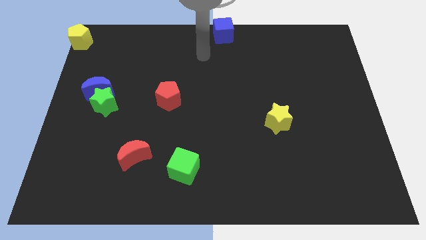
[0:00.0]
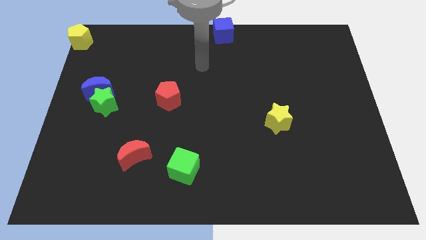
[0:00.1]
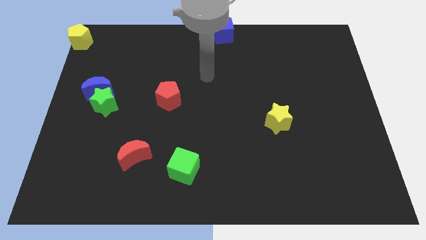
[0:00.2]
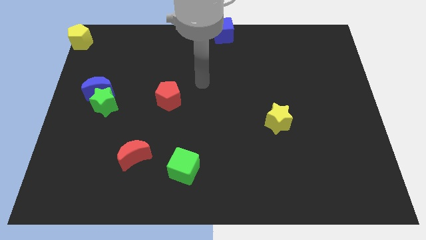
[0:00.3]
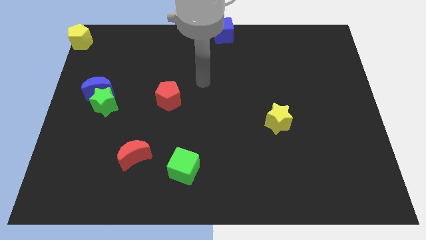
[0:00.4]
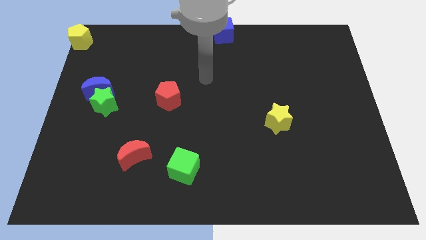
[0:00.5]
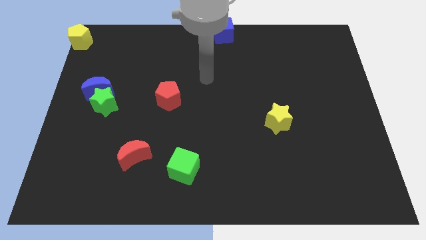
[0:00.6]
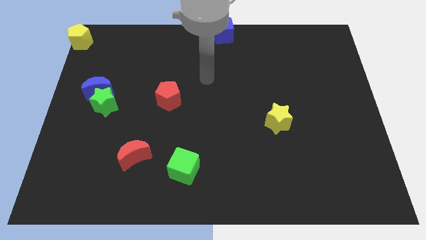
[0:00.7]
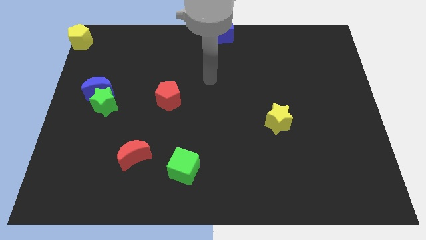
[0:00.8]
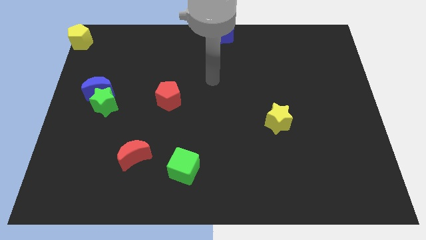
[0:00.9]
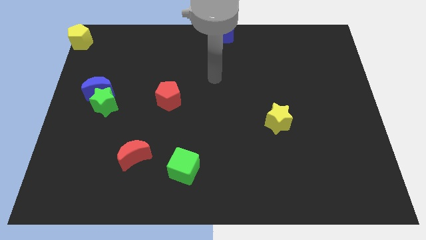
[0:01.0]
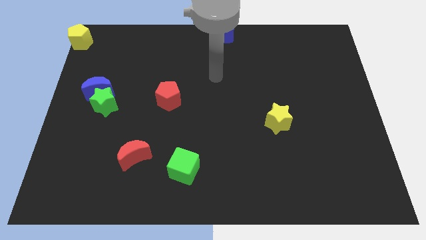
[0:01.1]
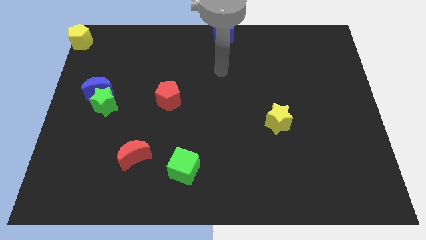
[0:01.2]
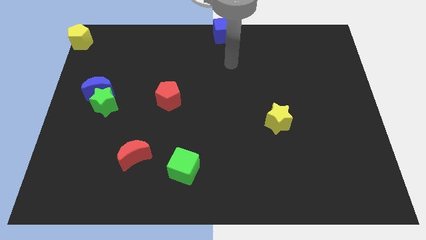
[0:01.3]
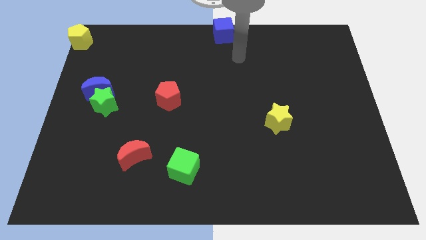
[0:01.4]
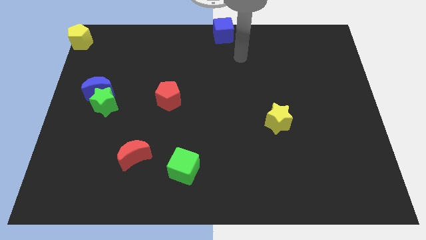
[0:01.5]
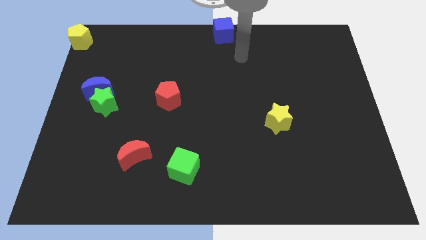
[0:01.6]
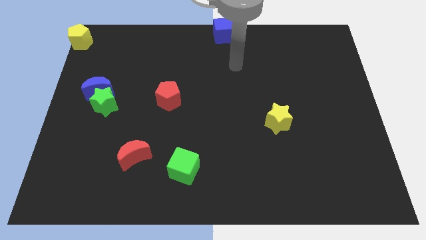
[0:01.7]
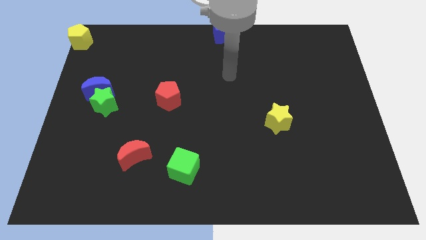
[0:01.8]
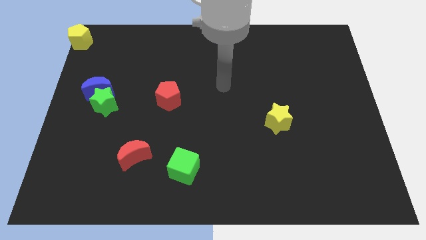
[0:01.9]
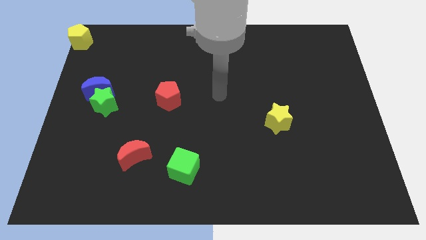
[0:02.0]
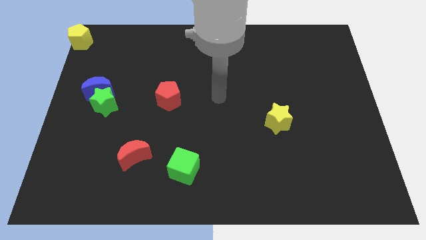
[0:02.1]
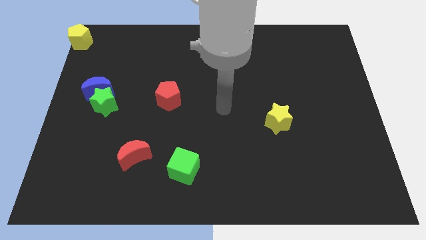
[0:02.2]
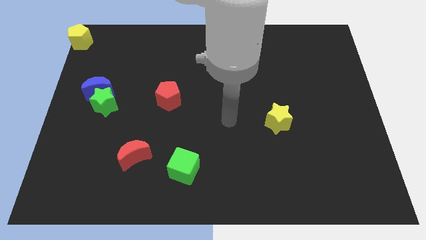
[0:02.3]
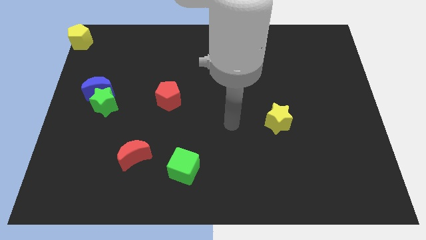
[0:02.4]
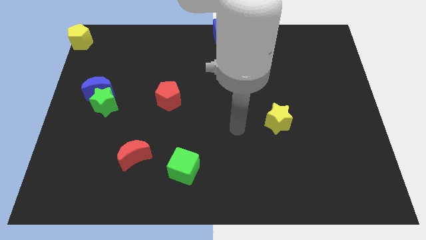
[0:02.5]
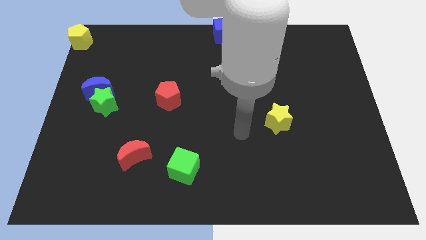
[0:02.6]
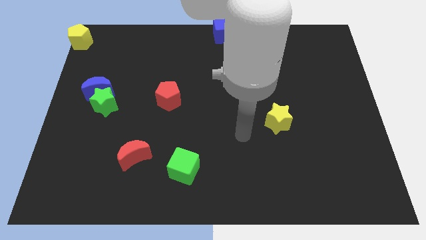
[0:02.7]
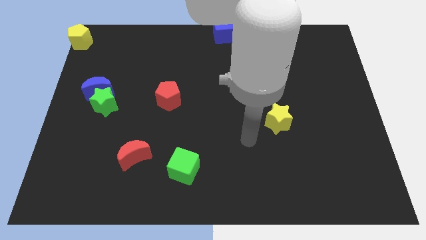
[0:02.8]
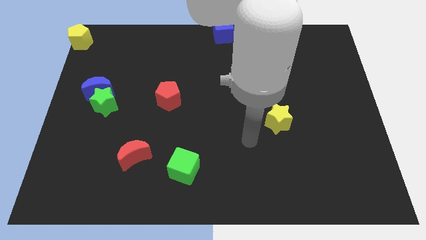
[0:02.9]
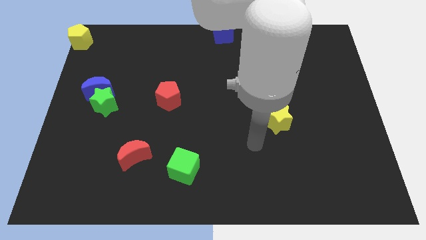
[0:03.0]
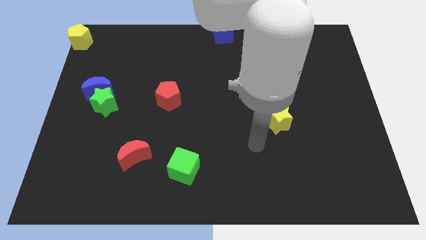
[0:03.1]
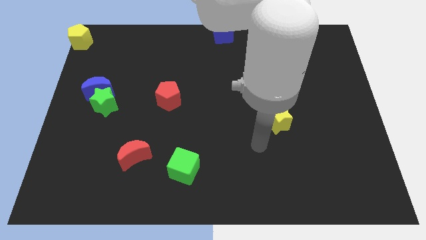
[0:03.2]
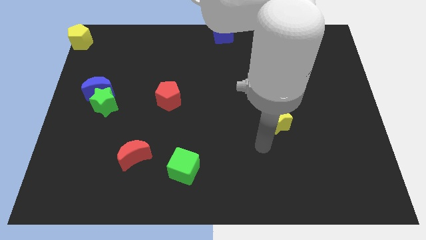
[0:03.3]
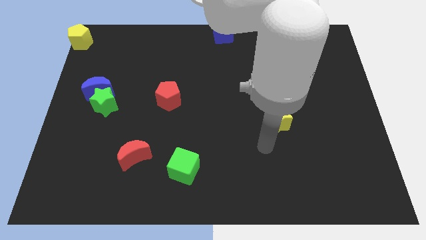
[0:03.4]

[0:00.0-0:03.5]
move your arm towards the yellow star

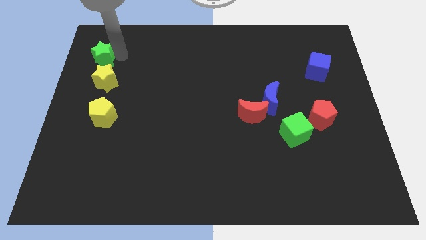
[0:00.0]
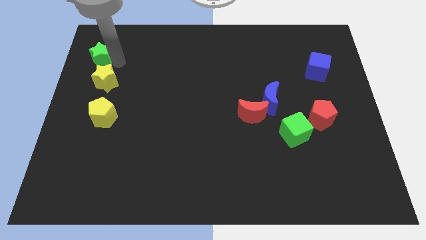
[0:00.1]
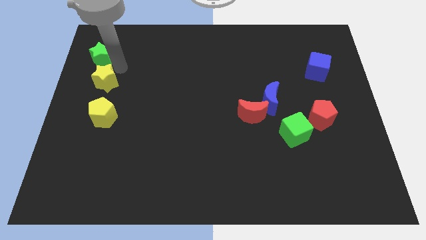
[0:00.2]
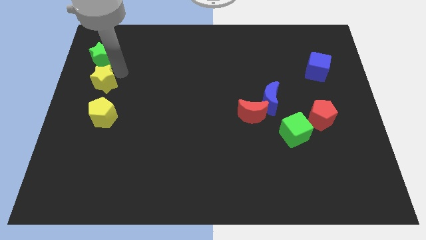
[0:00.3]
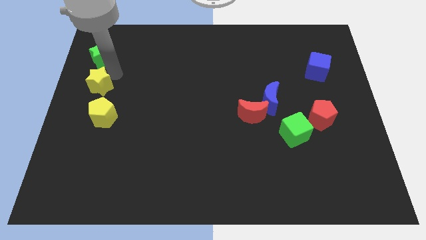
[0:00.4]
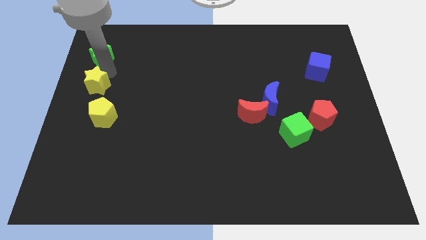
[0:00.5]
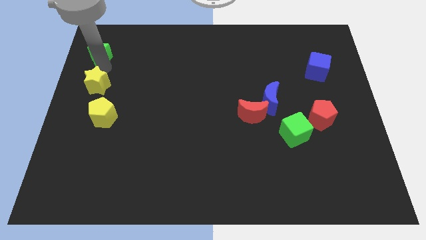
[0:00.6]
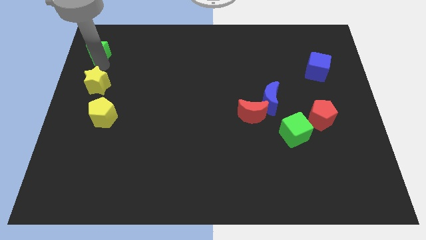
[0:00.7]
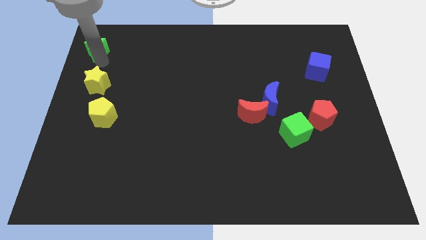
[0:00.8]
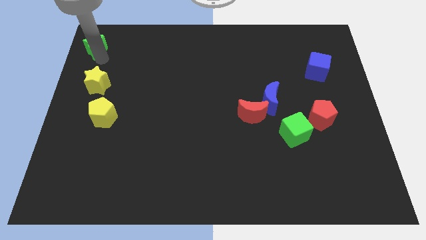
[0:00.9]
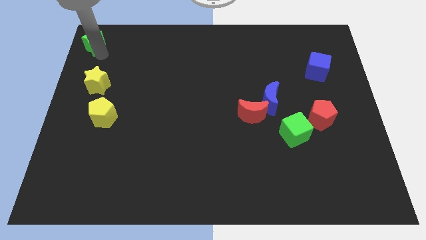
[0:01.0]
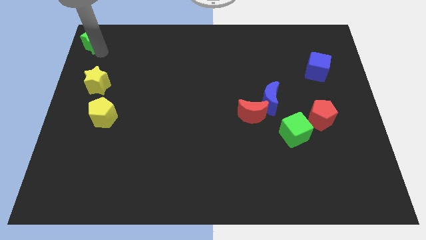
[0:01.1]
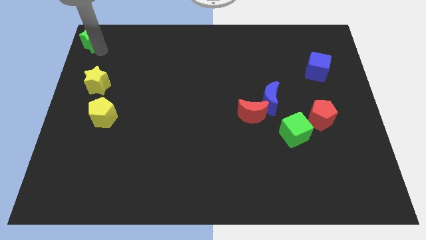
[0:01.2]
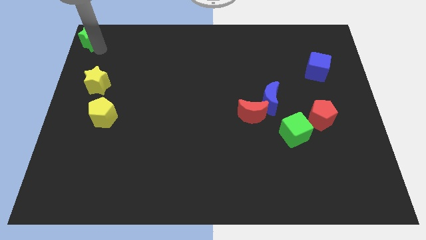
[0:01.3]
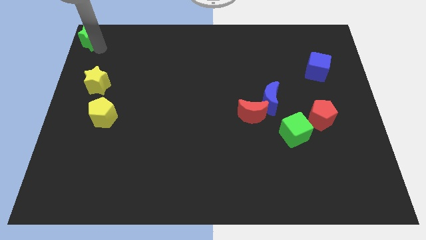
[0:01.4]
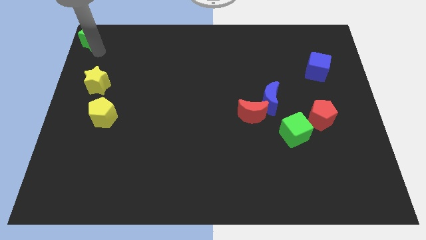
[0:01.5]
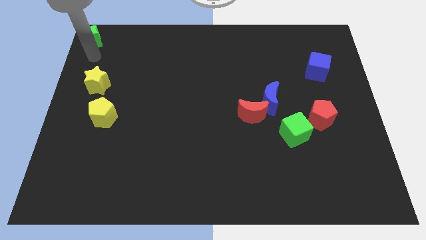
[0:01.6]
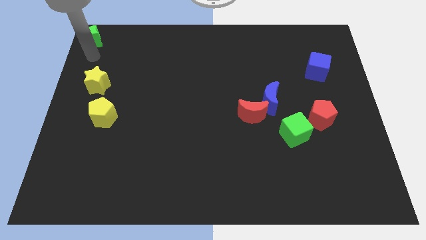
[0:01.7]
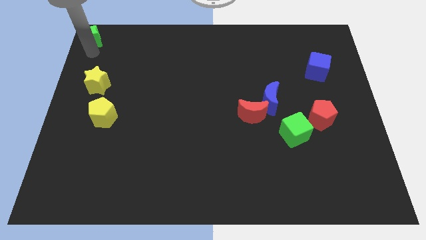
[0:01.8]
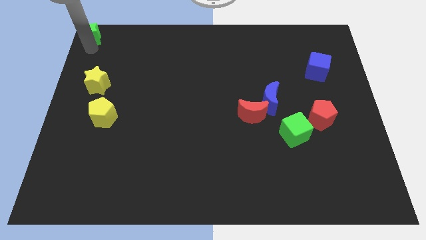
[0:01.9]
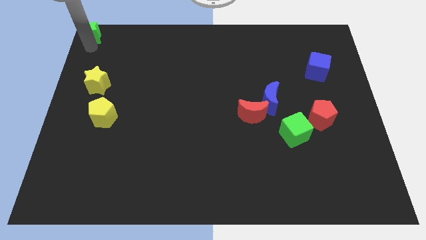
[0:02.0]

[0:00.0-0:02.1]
push green star to the top left corner

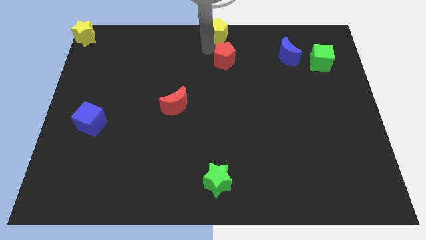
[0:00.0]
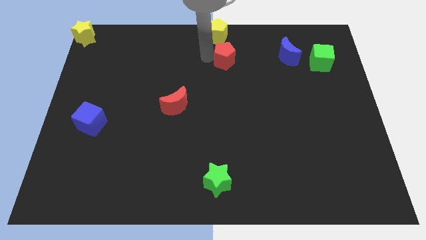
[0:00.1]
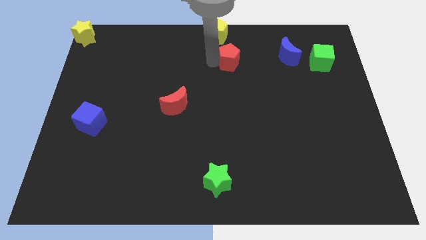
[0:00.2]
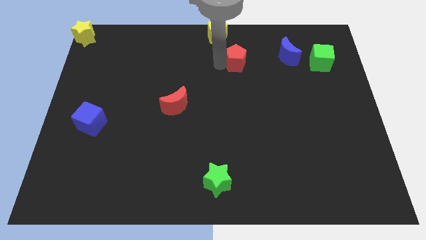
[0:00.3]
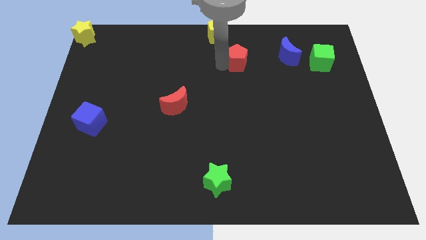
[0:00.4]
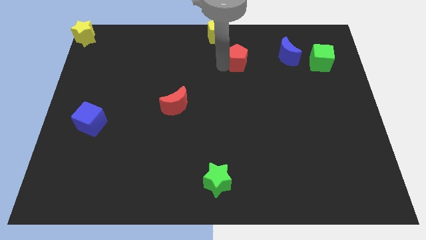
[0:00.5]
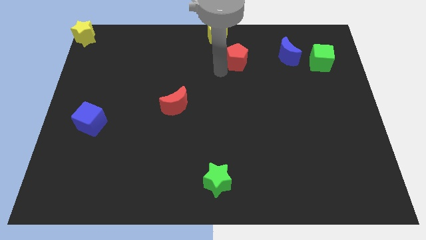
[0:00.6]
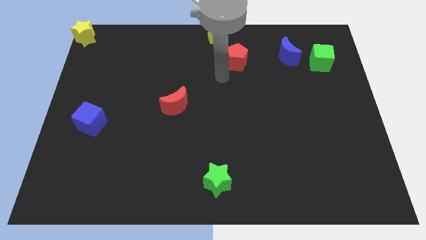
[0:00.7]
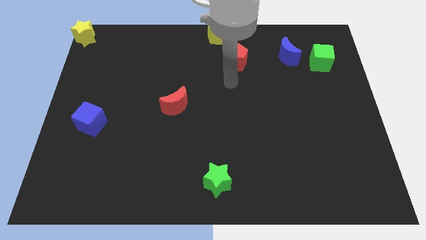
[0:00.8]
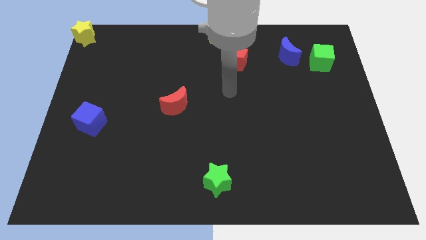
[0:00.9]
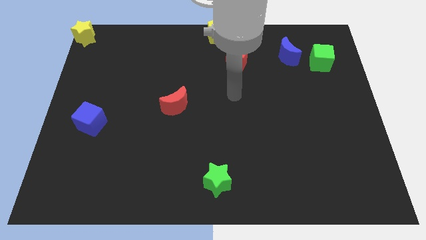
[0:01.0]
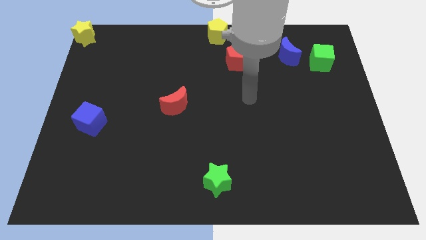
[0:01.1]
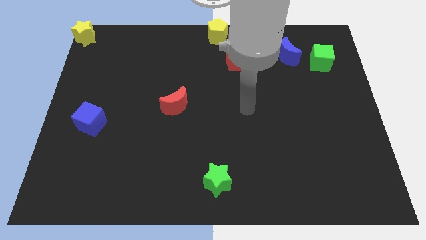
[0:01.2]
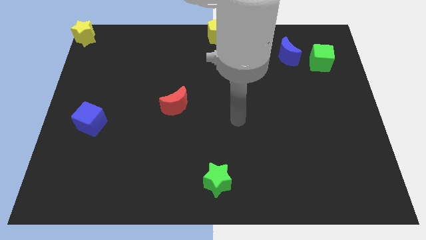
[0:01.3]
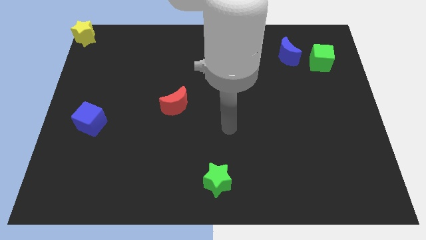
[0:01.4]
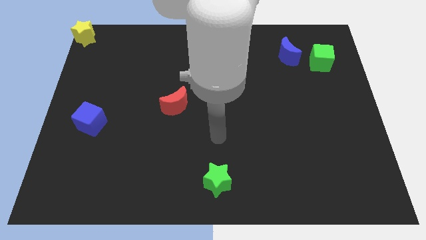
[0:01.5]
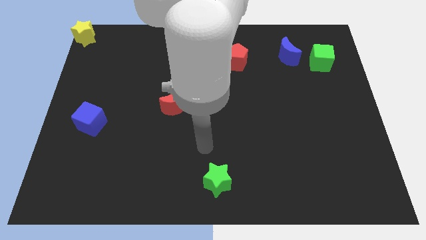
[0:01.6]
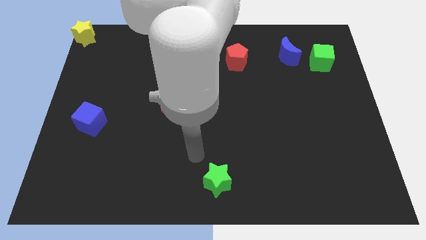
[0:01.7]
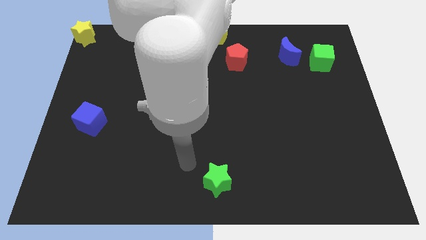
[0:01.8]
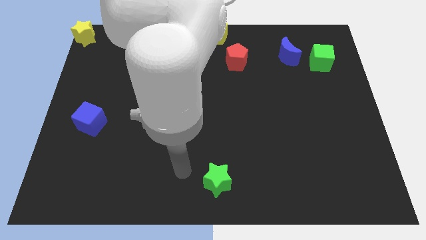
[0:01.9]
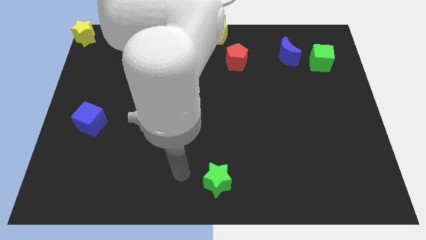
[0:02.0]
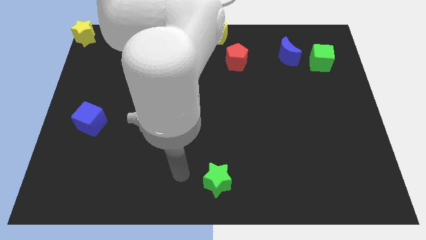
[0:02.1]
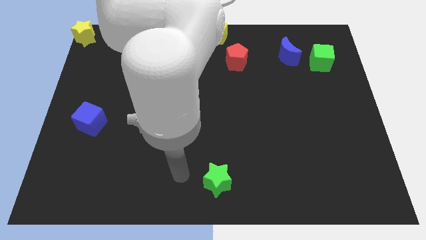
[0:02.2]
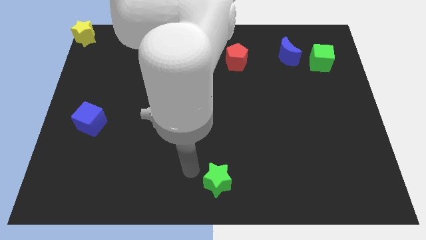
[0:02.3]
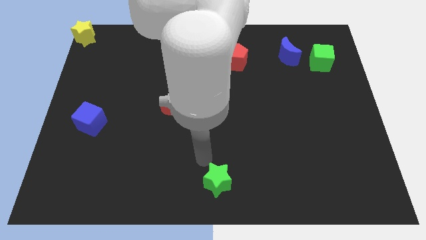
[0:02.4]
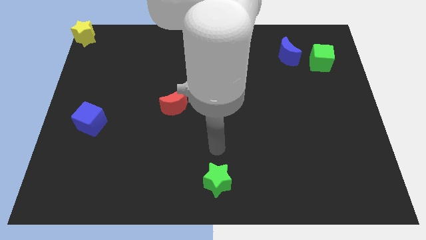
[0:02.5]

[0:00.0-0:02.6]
push the red pentagon diagonally to the bottom right of yellow pentagon

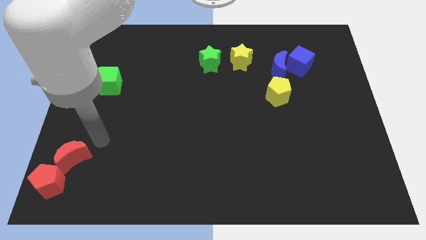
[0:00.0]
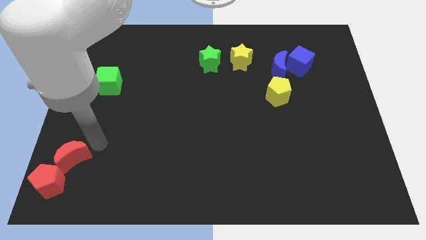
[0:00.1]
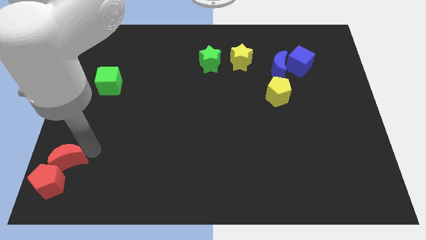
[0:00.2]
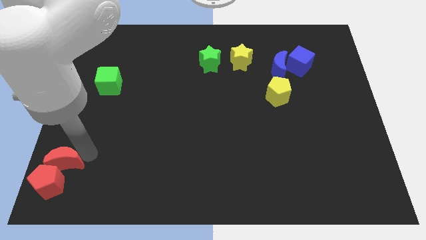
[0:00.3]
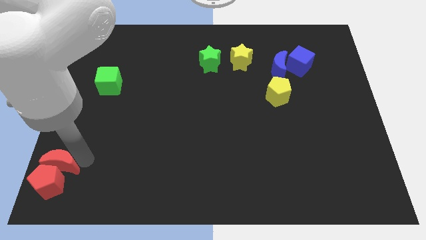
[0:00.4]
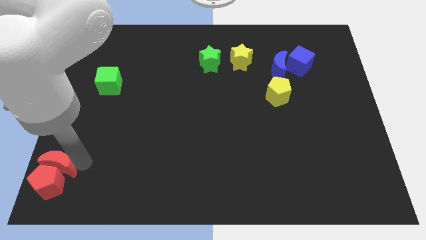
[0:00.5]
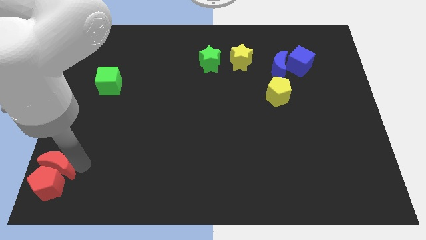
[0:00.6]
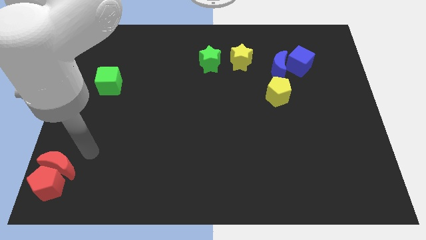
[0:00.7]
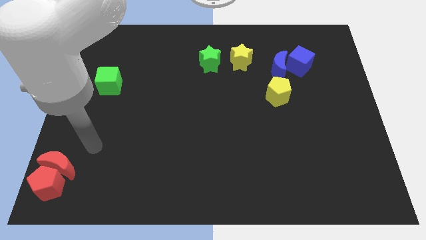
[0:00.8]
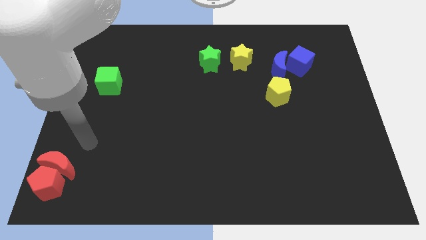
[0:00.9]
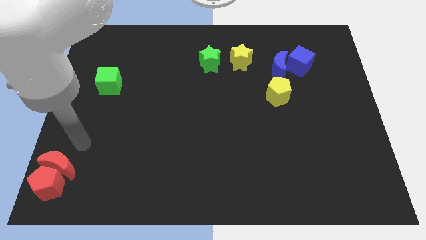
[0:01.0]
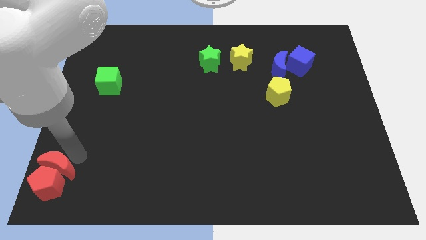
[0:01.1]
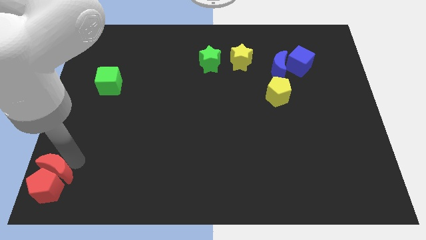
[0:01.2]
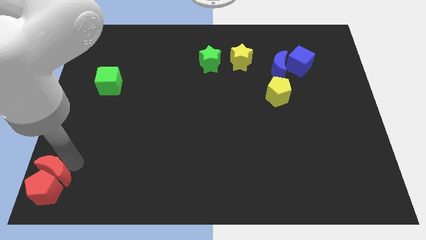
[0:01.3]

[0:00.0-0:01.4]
push the red moon into the red pentagon
